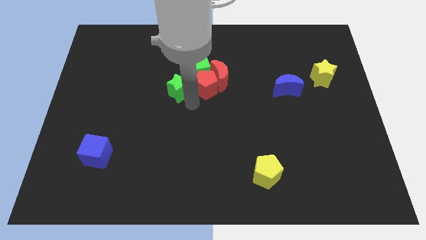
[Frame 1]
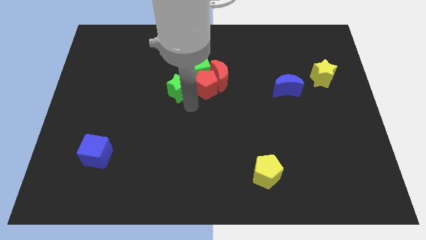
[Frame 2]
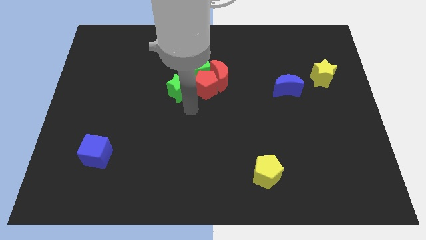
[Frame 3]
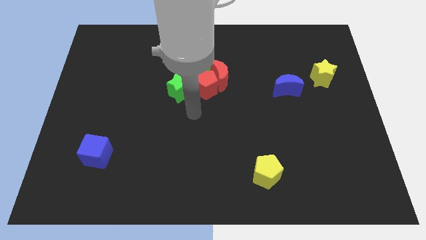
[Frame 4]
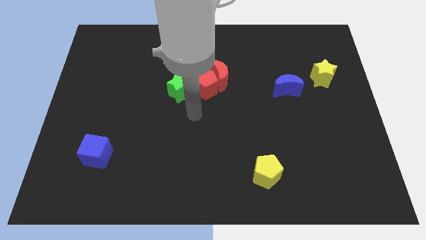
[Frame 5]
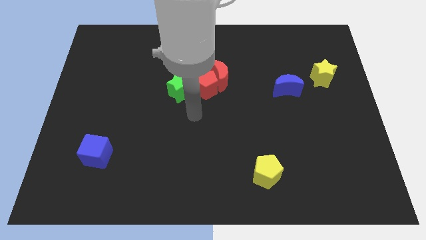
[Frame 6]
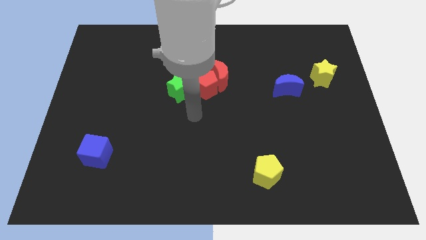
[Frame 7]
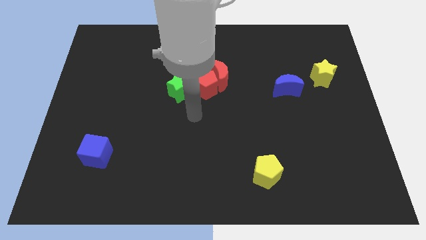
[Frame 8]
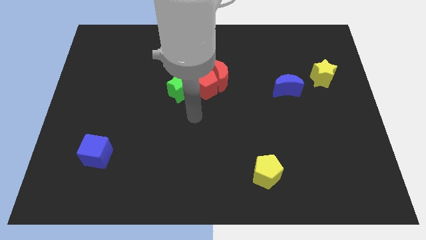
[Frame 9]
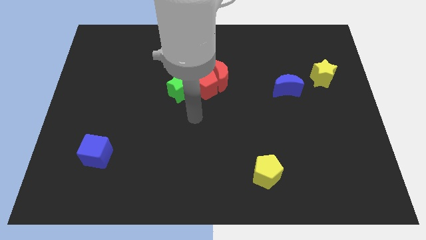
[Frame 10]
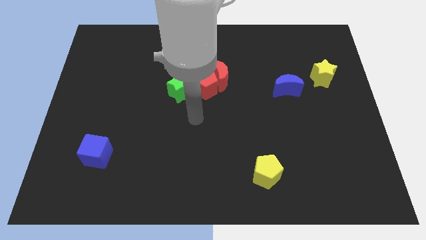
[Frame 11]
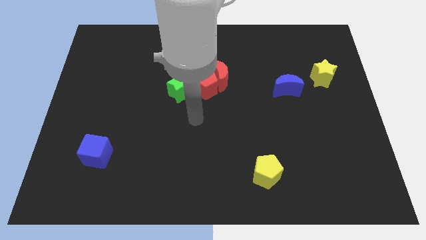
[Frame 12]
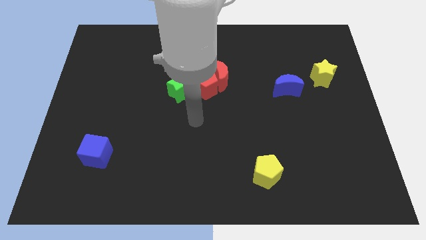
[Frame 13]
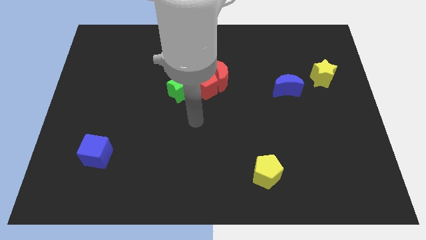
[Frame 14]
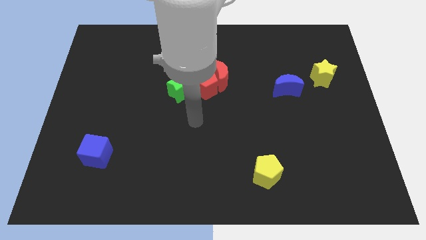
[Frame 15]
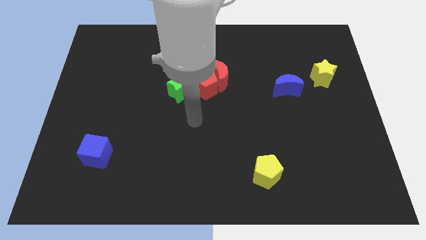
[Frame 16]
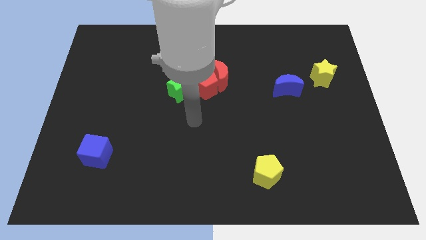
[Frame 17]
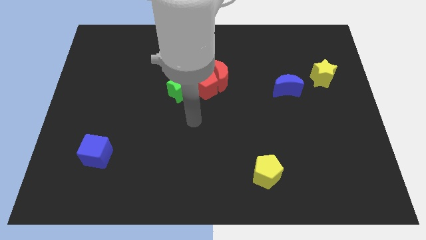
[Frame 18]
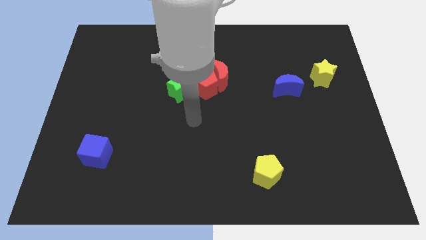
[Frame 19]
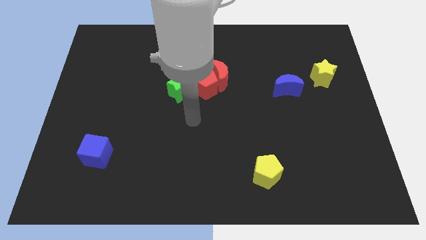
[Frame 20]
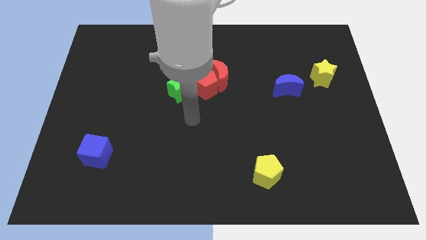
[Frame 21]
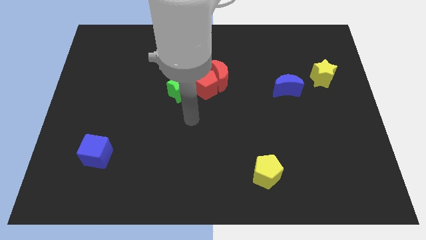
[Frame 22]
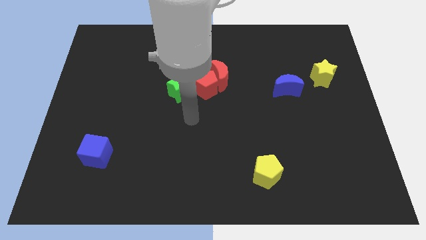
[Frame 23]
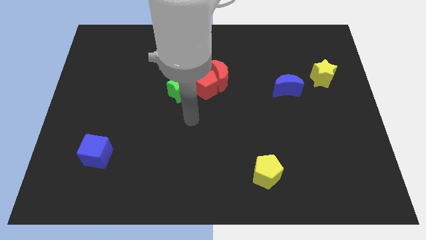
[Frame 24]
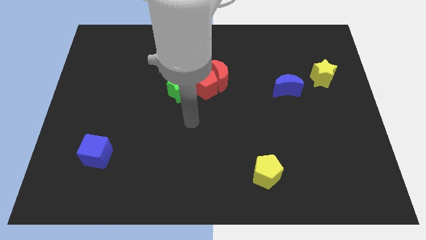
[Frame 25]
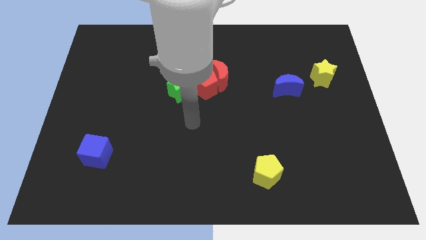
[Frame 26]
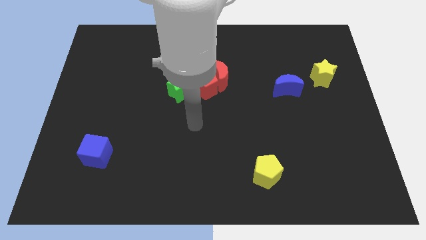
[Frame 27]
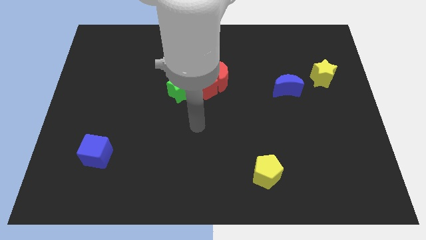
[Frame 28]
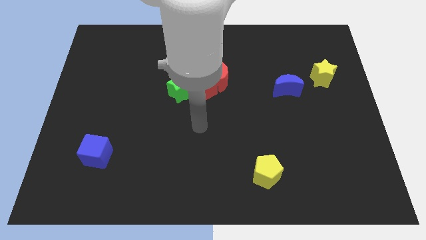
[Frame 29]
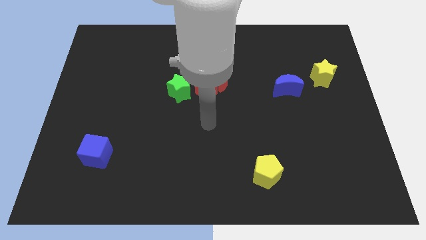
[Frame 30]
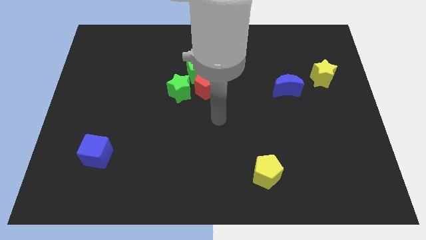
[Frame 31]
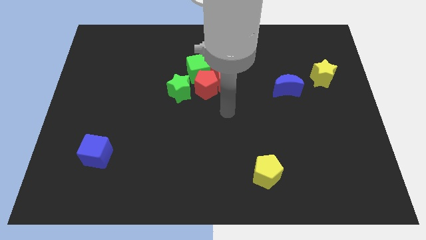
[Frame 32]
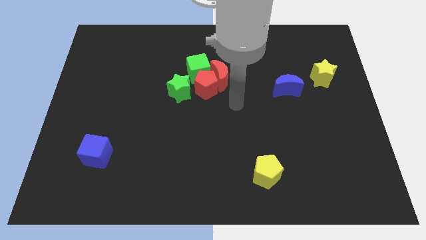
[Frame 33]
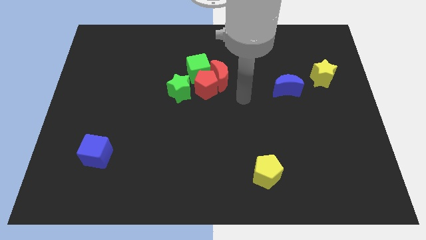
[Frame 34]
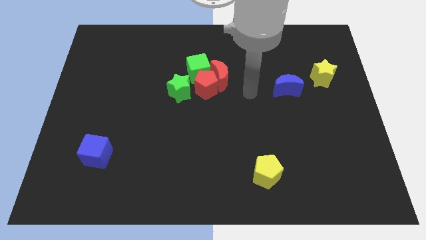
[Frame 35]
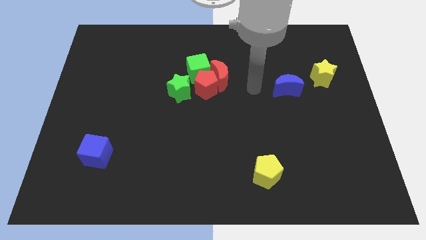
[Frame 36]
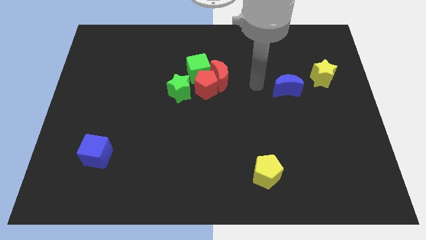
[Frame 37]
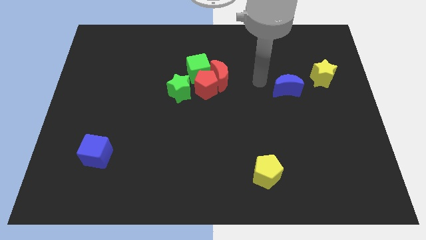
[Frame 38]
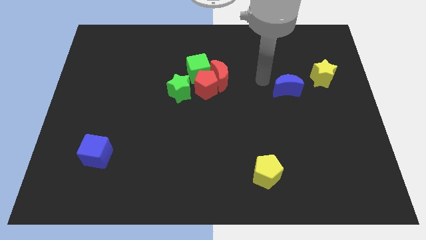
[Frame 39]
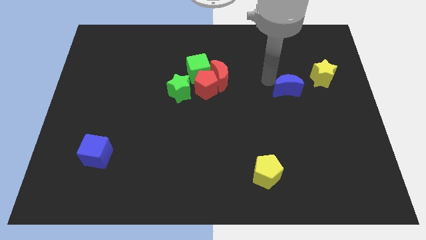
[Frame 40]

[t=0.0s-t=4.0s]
move your arm towards the blue crescent

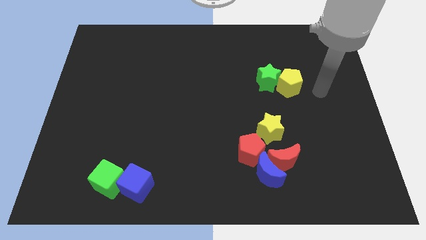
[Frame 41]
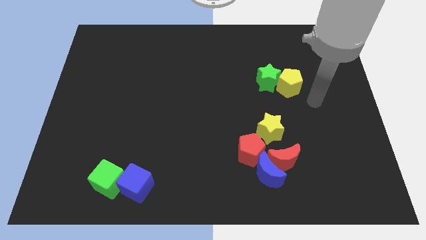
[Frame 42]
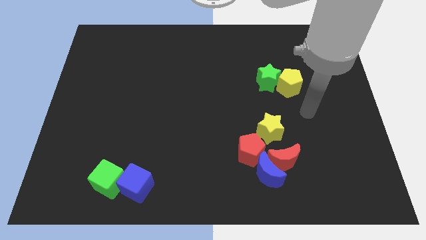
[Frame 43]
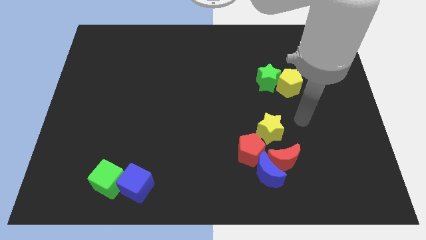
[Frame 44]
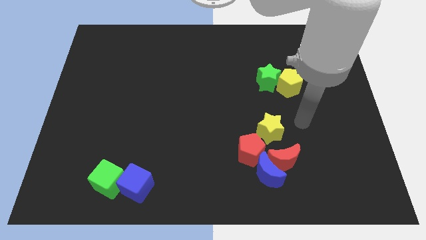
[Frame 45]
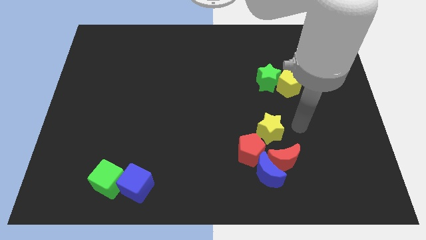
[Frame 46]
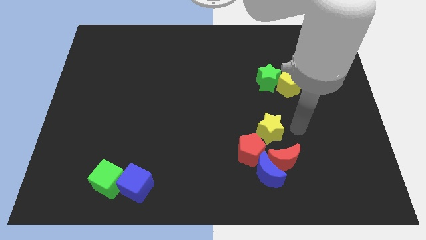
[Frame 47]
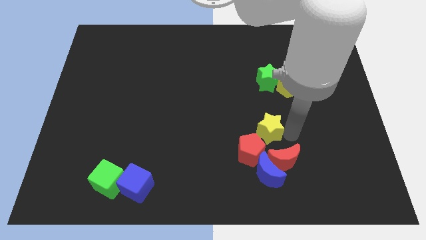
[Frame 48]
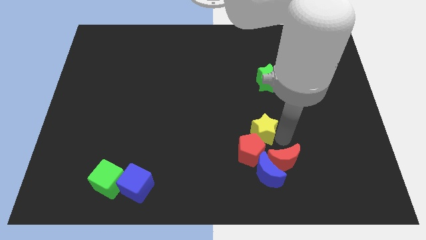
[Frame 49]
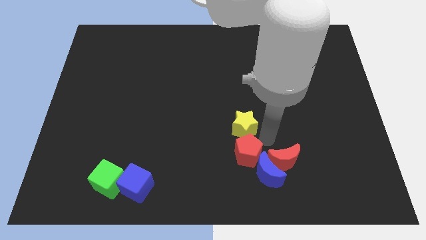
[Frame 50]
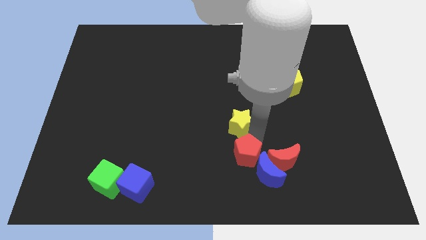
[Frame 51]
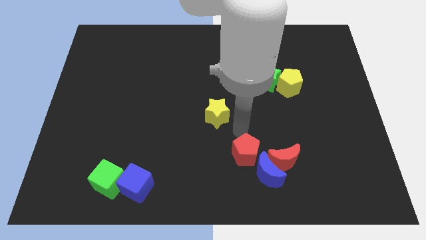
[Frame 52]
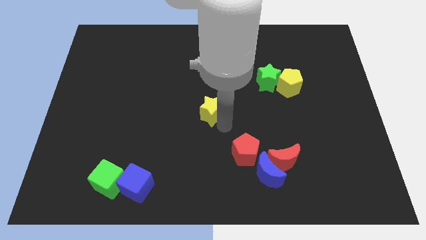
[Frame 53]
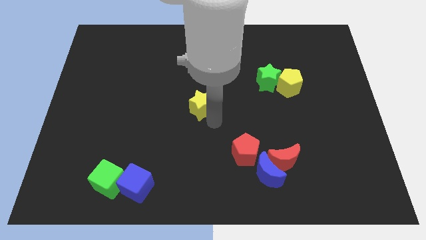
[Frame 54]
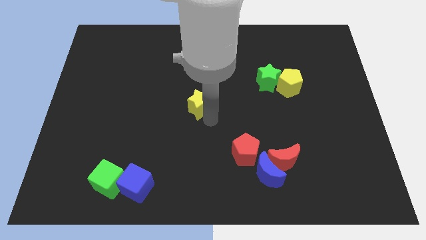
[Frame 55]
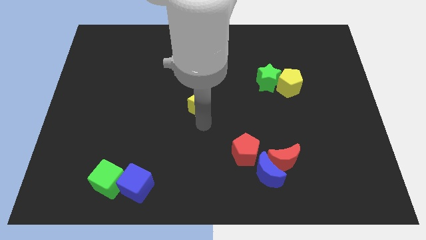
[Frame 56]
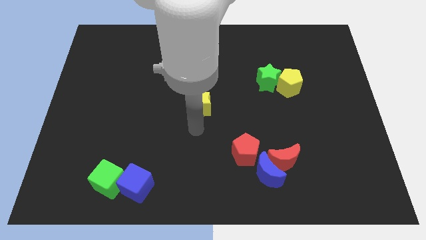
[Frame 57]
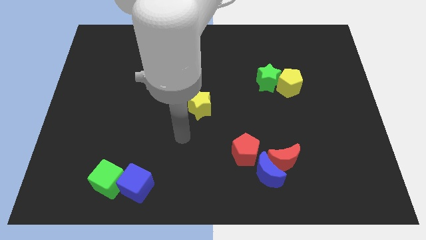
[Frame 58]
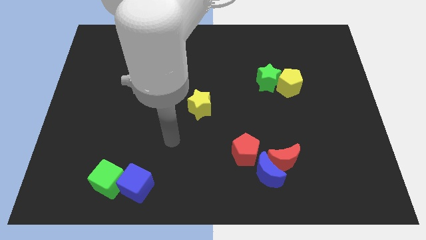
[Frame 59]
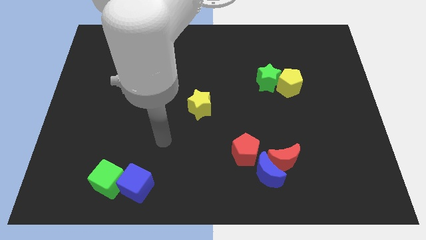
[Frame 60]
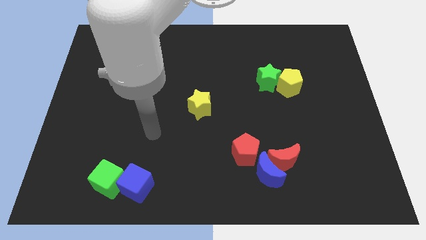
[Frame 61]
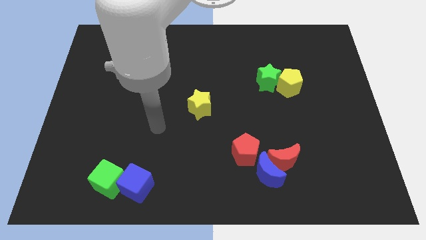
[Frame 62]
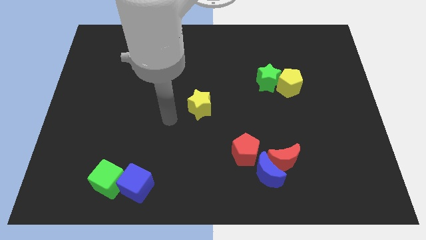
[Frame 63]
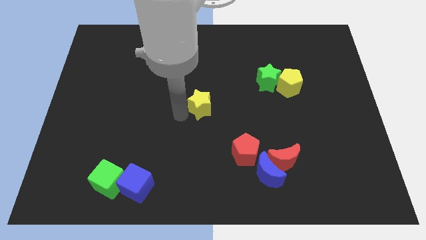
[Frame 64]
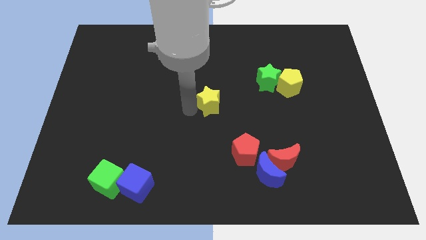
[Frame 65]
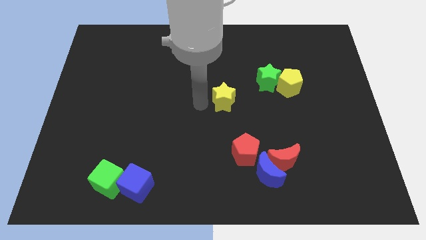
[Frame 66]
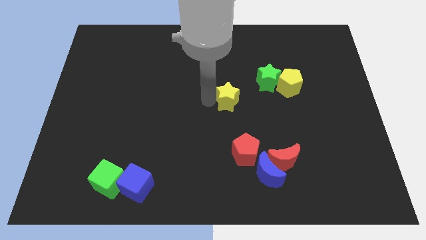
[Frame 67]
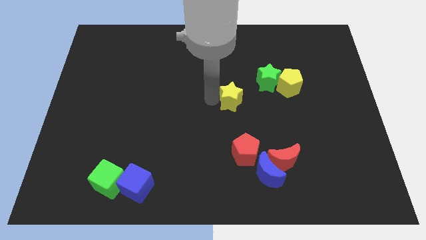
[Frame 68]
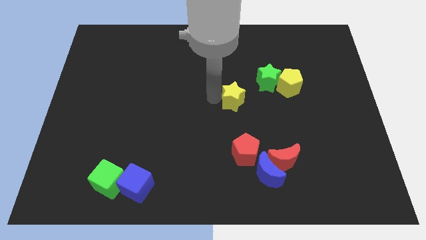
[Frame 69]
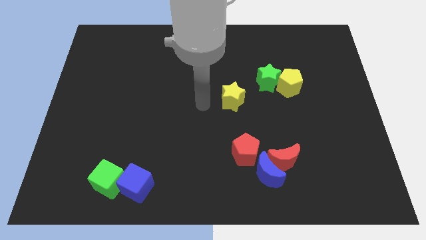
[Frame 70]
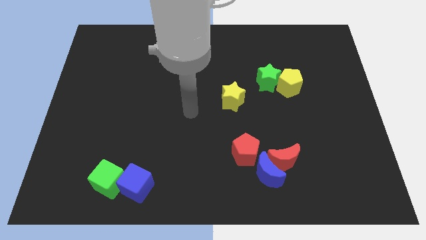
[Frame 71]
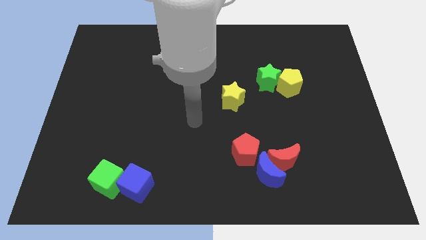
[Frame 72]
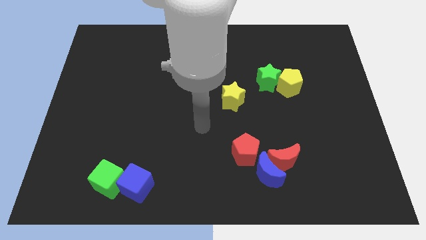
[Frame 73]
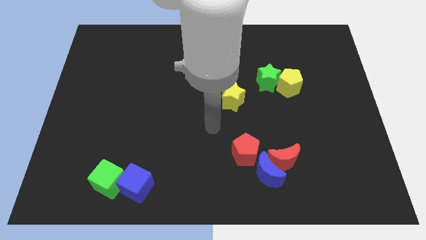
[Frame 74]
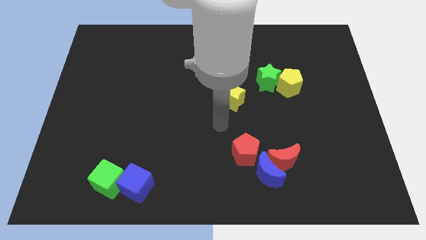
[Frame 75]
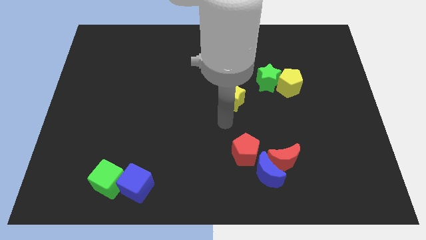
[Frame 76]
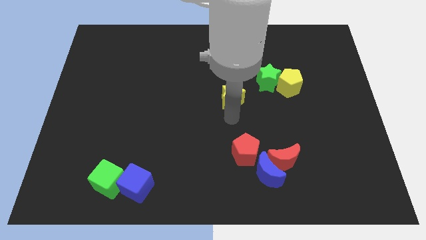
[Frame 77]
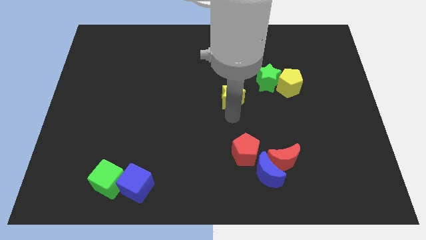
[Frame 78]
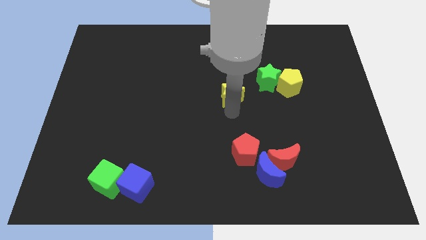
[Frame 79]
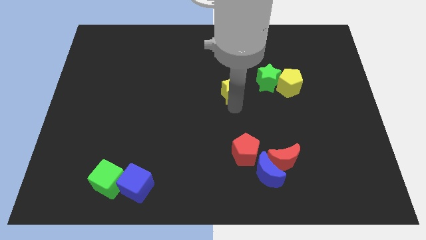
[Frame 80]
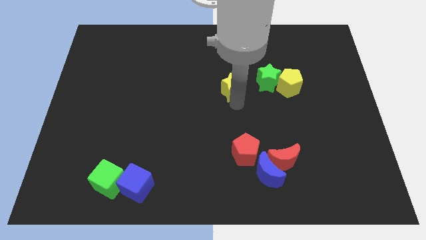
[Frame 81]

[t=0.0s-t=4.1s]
place the yellow star at the top of the red pentagon

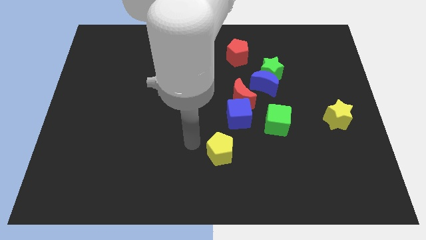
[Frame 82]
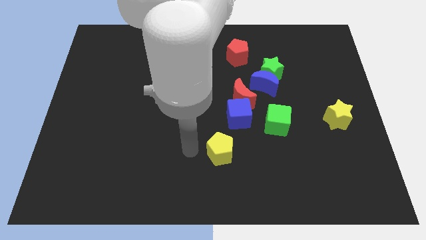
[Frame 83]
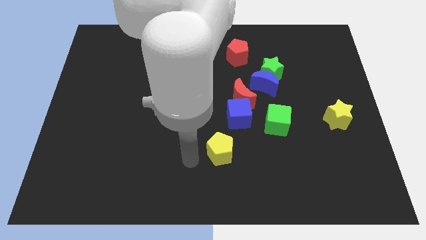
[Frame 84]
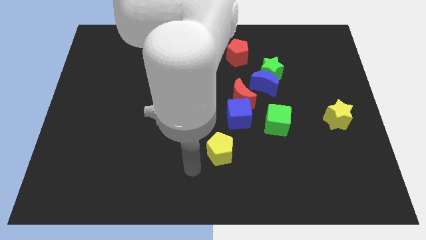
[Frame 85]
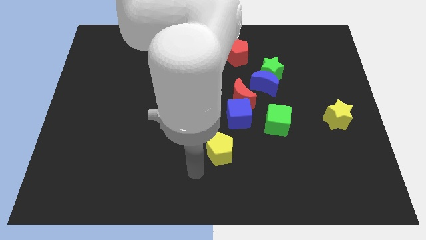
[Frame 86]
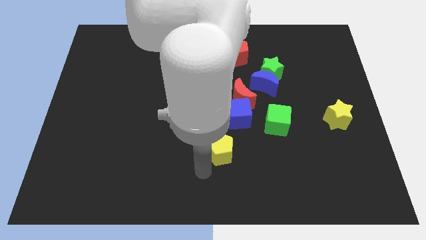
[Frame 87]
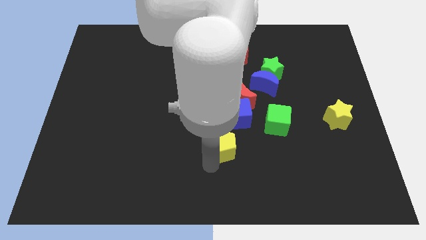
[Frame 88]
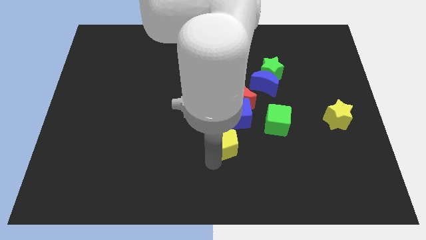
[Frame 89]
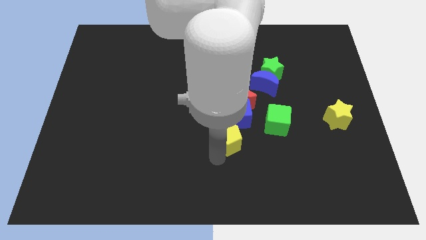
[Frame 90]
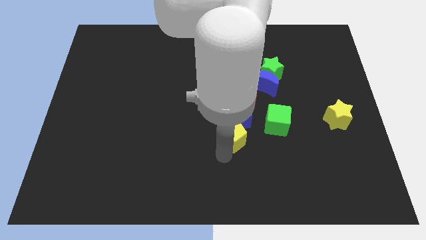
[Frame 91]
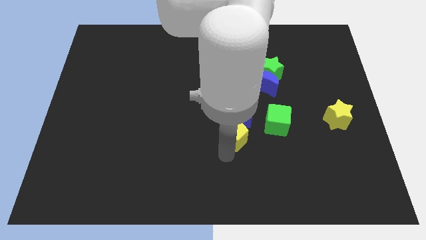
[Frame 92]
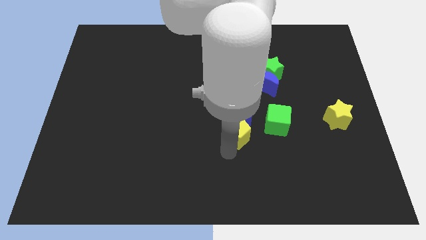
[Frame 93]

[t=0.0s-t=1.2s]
move the yellow pentagon below the blue cube
